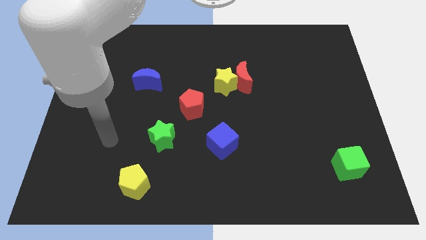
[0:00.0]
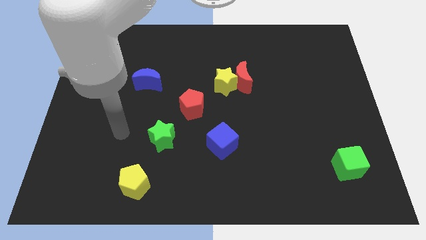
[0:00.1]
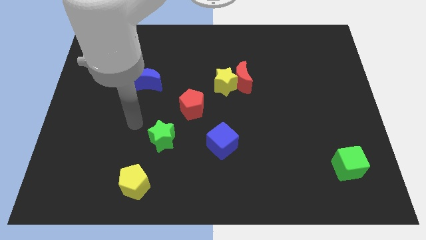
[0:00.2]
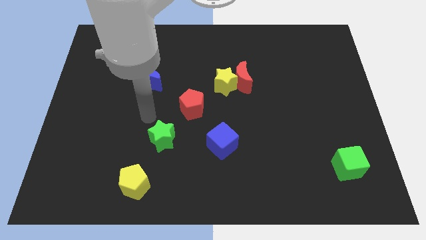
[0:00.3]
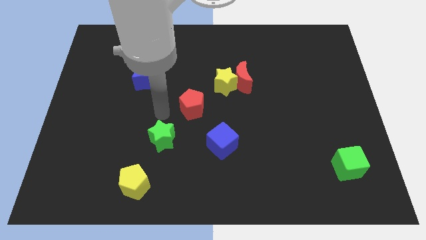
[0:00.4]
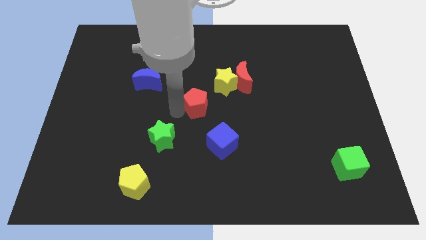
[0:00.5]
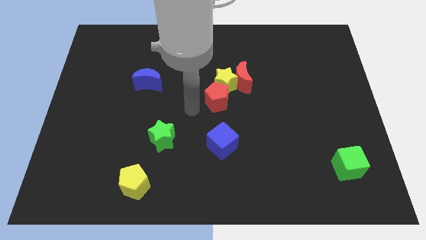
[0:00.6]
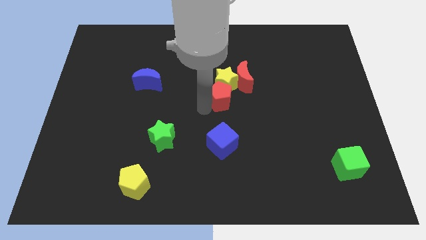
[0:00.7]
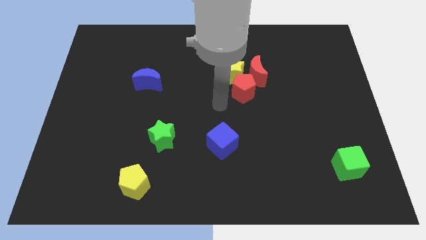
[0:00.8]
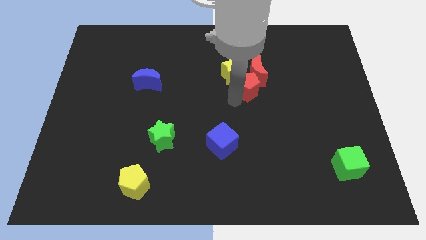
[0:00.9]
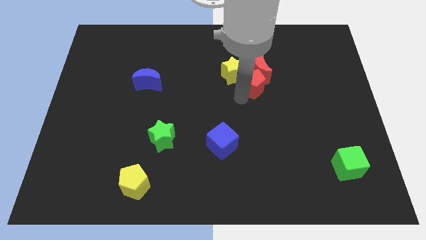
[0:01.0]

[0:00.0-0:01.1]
push the red pentagon into the red moon

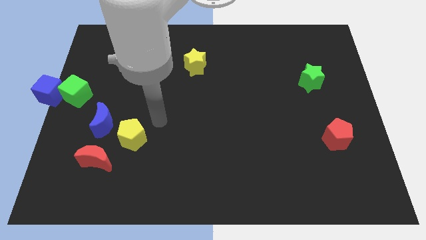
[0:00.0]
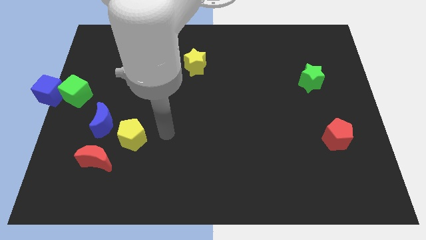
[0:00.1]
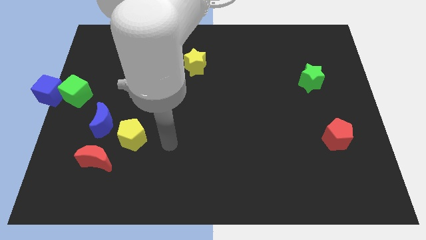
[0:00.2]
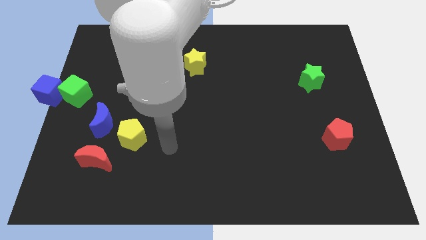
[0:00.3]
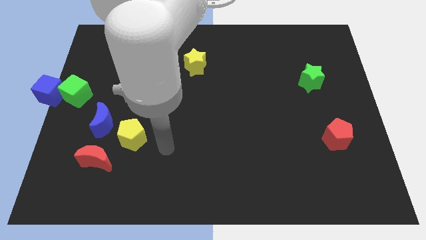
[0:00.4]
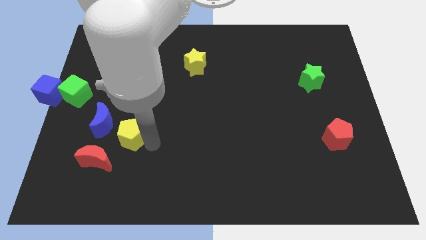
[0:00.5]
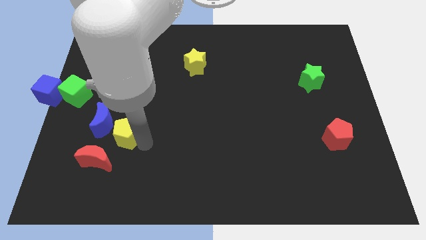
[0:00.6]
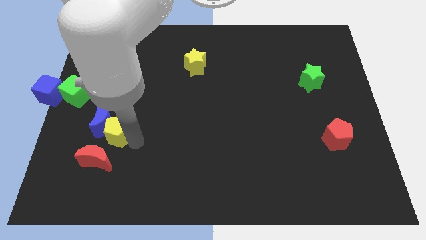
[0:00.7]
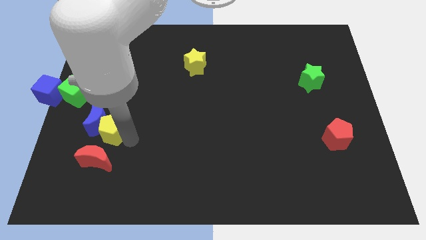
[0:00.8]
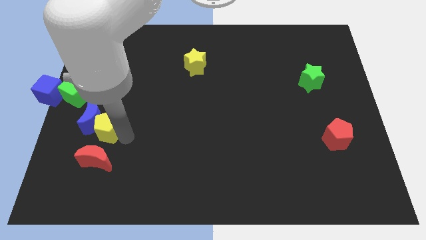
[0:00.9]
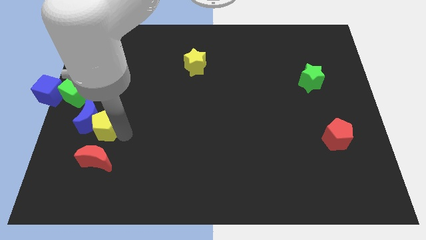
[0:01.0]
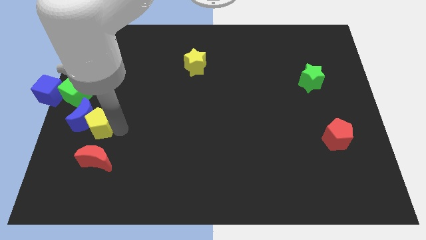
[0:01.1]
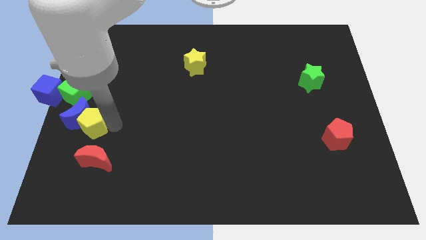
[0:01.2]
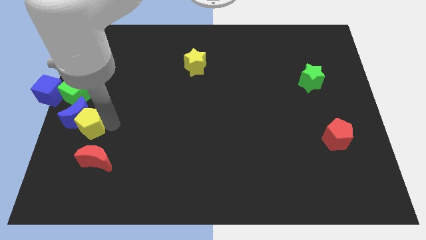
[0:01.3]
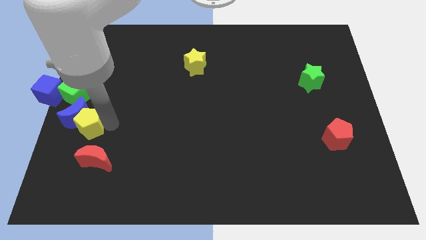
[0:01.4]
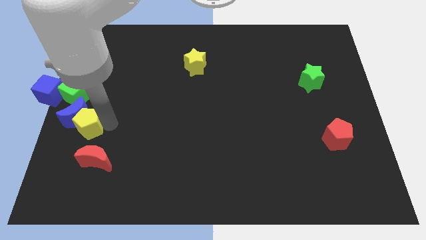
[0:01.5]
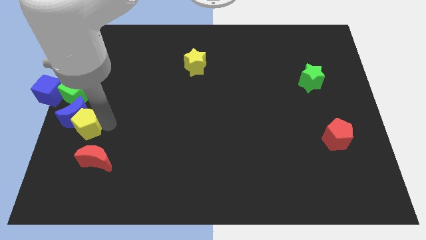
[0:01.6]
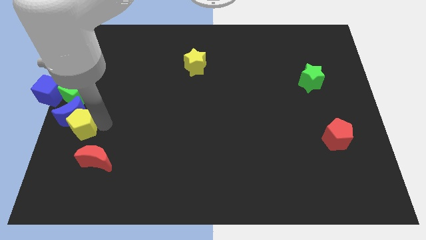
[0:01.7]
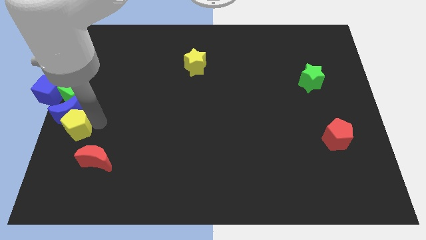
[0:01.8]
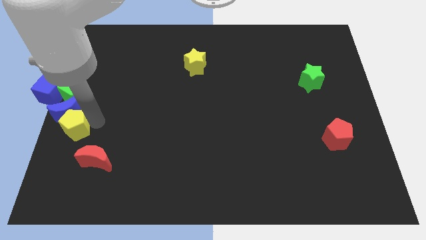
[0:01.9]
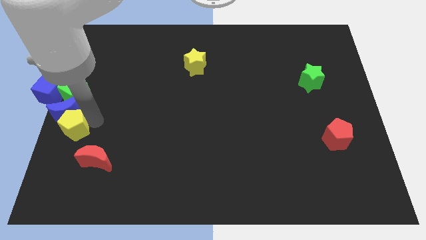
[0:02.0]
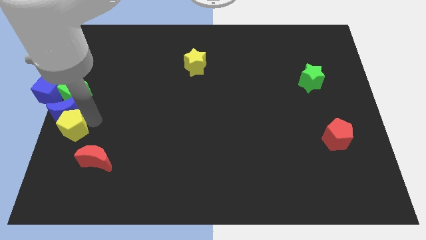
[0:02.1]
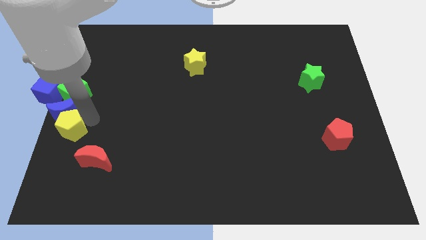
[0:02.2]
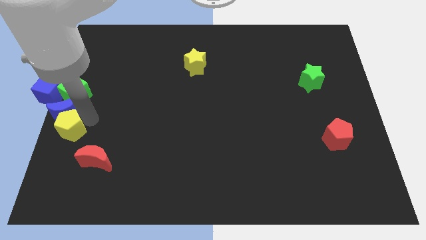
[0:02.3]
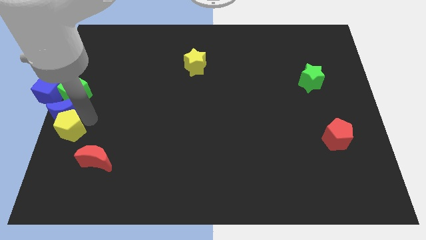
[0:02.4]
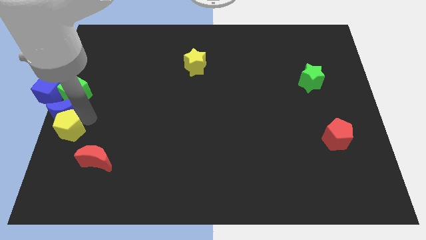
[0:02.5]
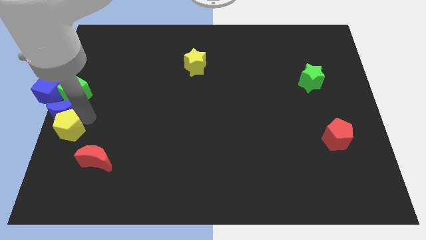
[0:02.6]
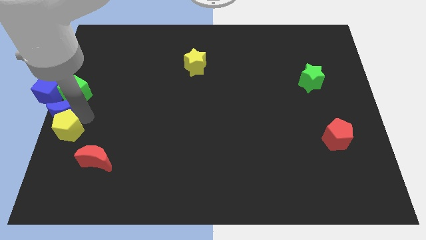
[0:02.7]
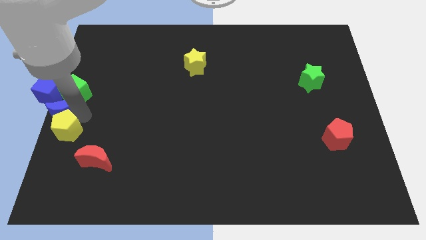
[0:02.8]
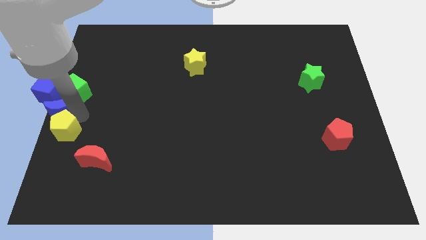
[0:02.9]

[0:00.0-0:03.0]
push the blue crescent towards the left center of the board with the help of the yellow pentagon

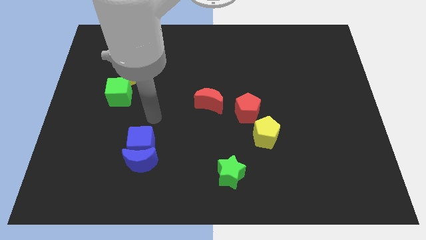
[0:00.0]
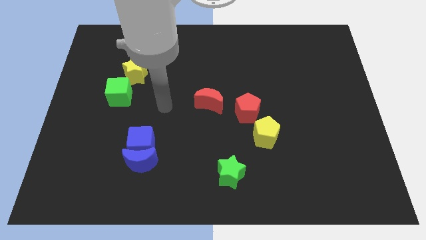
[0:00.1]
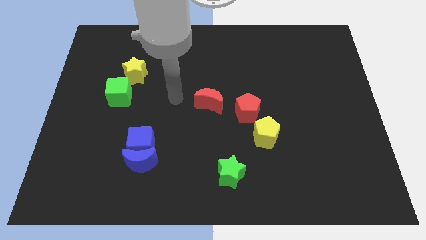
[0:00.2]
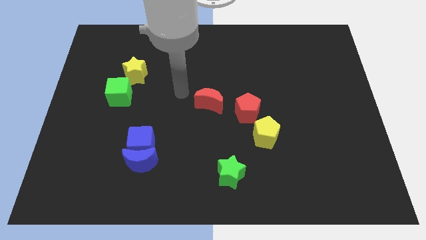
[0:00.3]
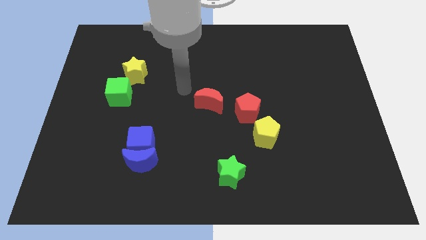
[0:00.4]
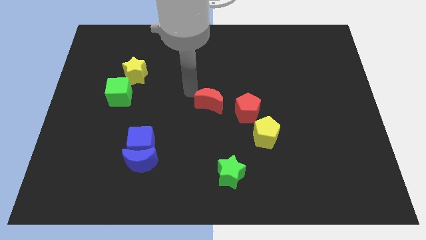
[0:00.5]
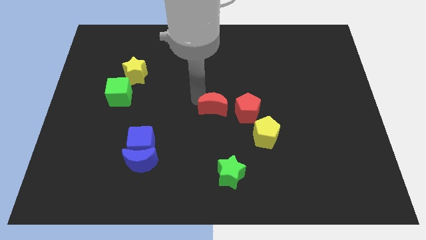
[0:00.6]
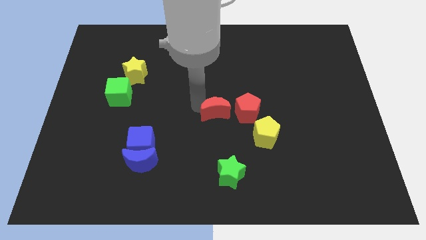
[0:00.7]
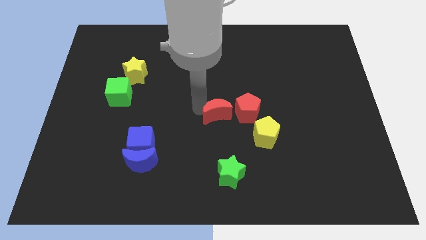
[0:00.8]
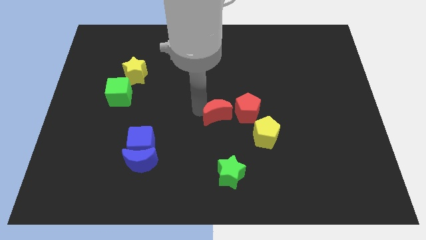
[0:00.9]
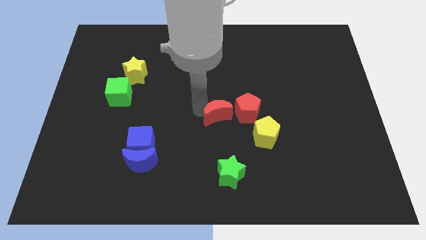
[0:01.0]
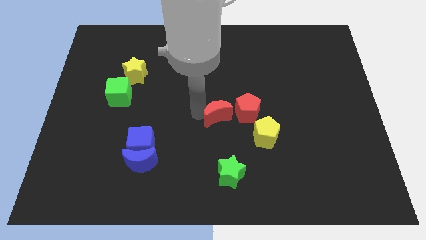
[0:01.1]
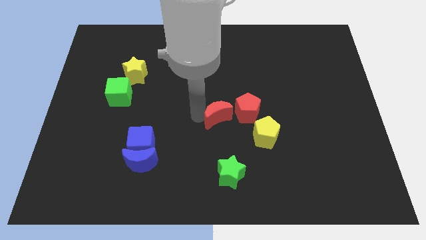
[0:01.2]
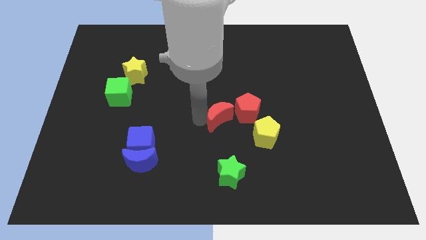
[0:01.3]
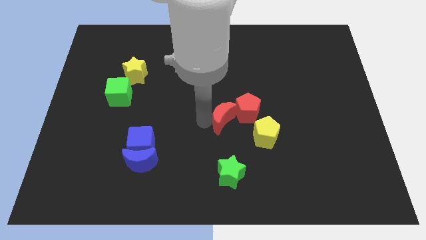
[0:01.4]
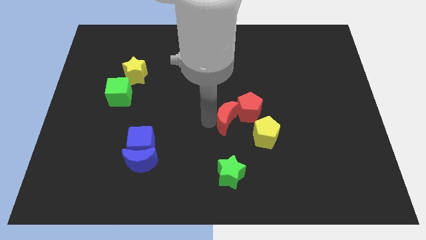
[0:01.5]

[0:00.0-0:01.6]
move the red crescent to the left of the red pentagon

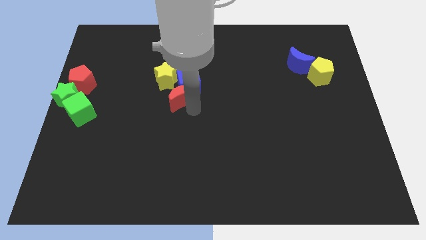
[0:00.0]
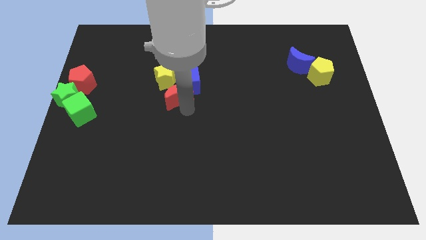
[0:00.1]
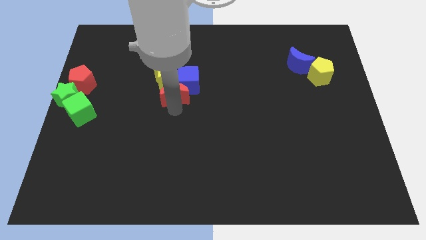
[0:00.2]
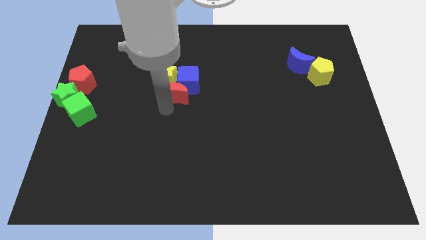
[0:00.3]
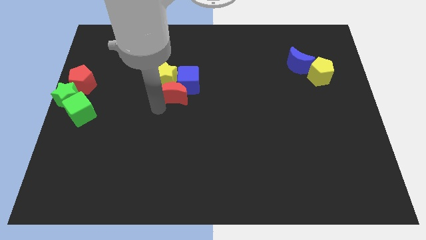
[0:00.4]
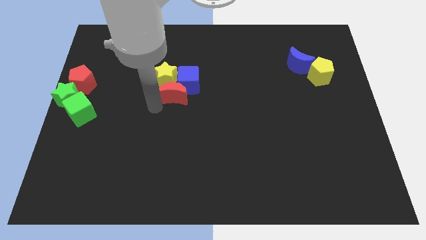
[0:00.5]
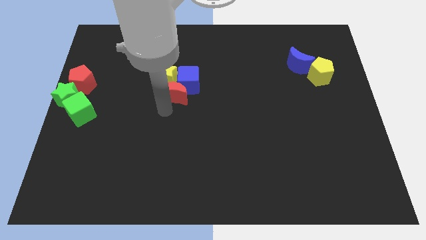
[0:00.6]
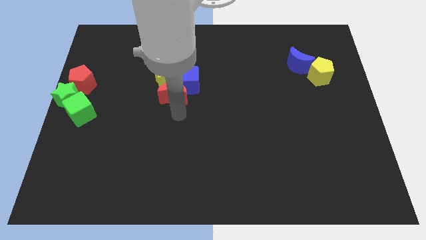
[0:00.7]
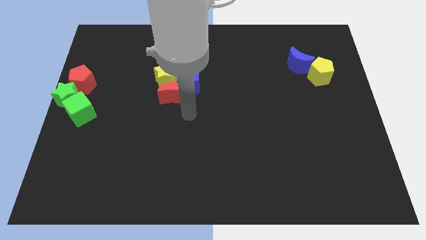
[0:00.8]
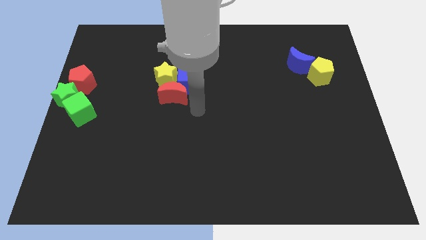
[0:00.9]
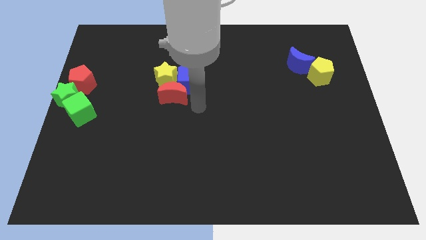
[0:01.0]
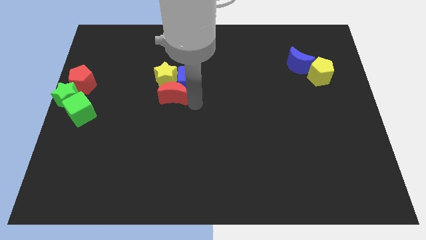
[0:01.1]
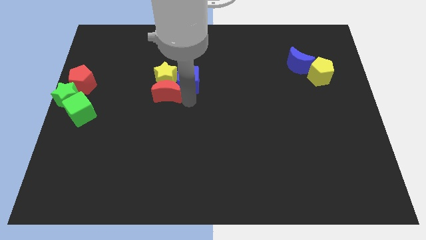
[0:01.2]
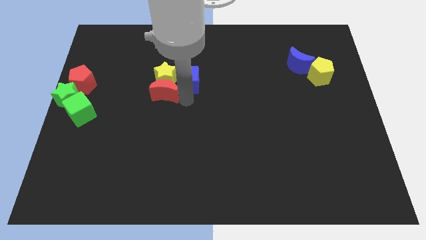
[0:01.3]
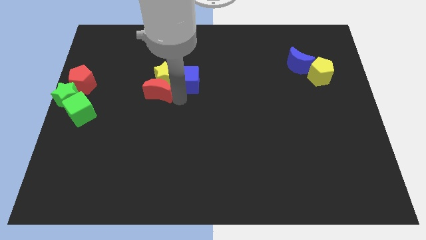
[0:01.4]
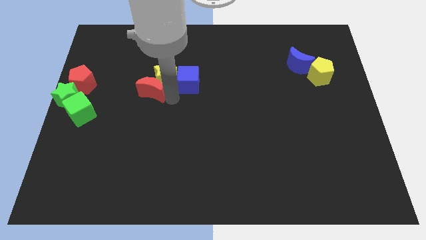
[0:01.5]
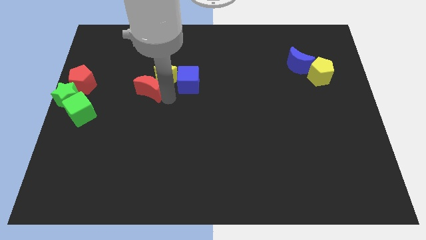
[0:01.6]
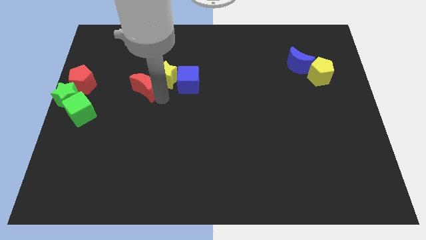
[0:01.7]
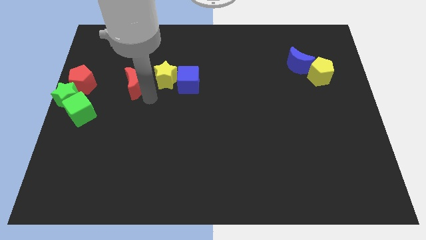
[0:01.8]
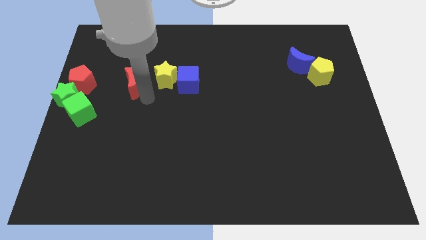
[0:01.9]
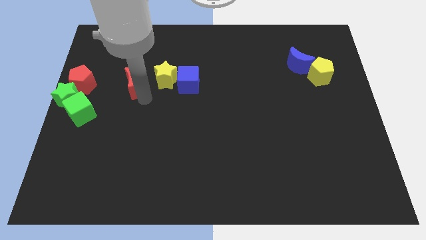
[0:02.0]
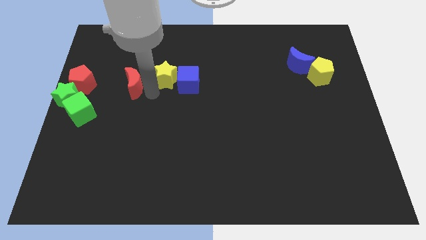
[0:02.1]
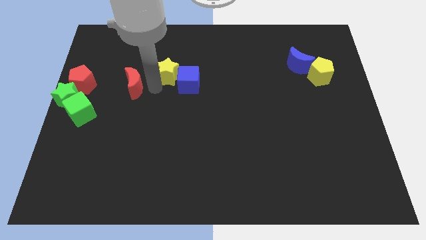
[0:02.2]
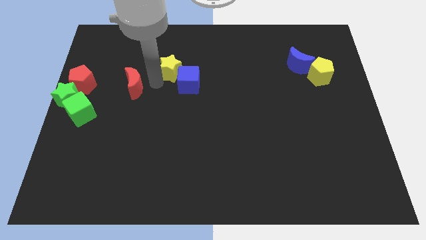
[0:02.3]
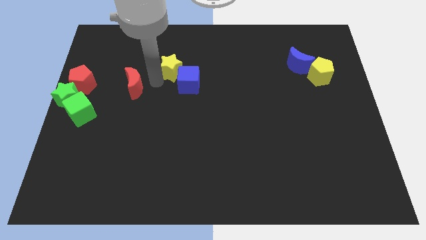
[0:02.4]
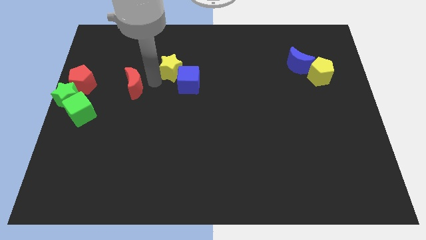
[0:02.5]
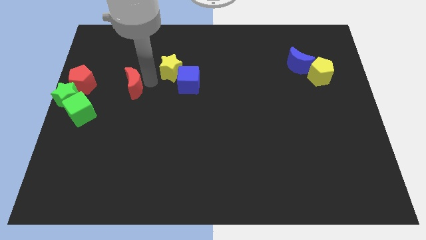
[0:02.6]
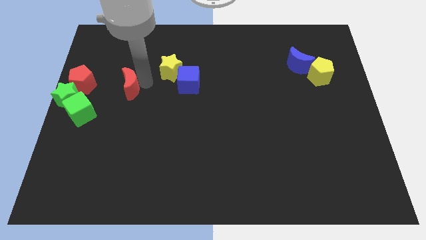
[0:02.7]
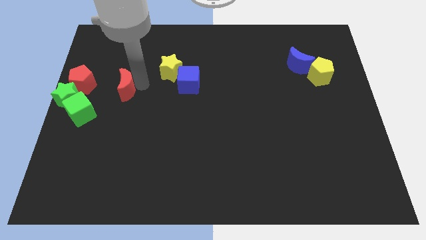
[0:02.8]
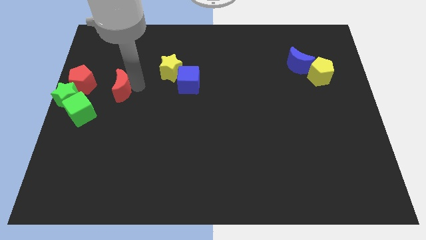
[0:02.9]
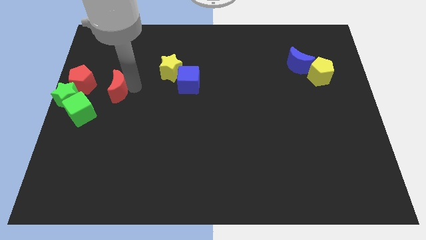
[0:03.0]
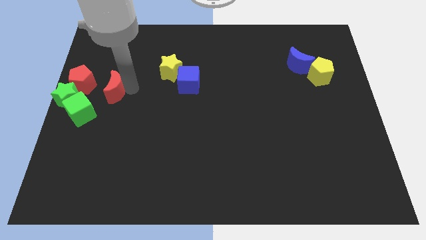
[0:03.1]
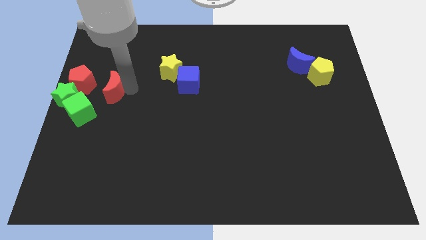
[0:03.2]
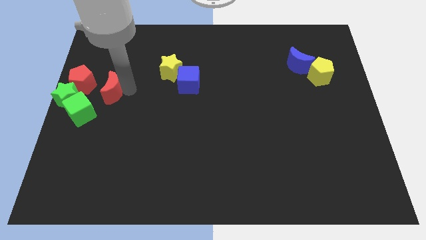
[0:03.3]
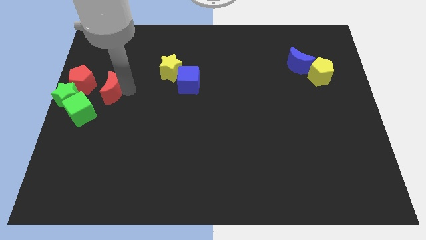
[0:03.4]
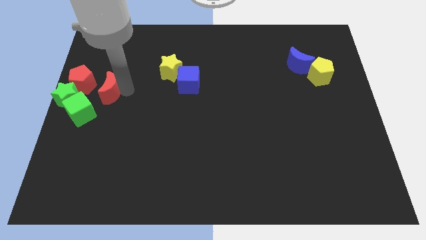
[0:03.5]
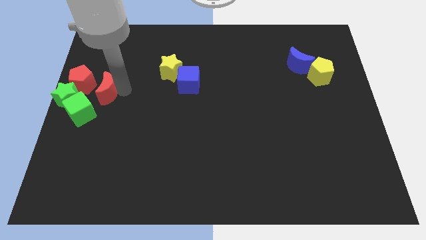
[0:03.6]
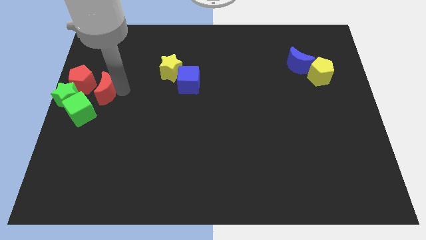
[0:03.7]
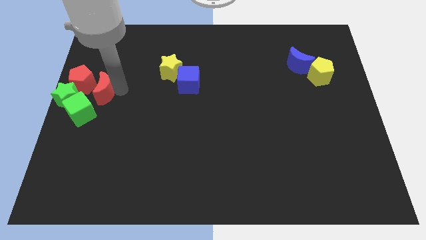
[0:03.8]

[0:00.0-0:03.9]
separate the red moon from blue cube
